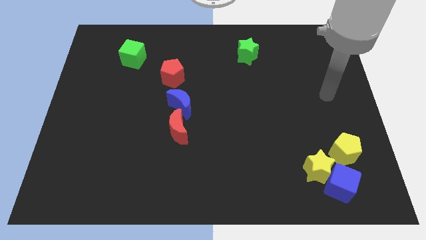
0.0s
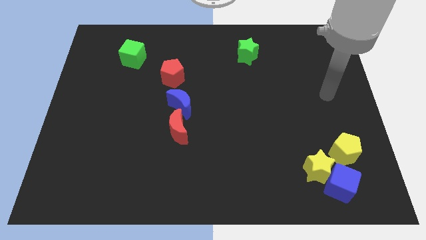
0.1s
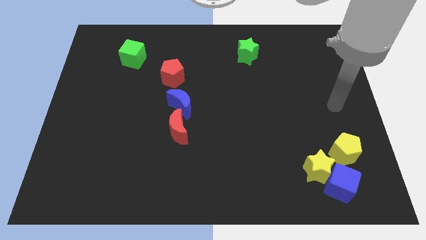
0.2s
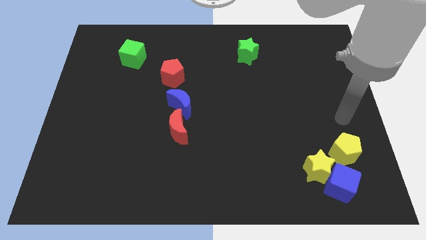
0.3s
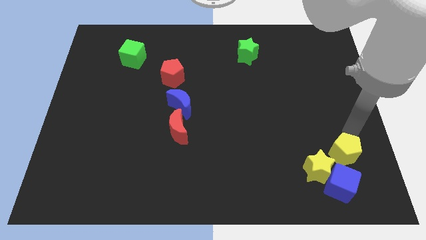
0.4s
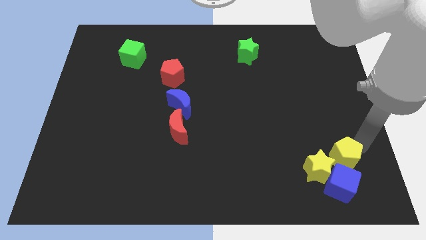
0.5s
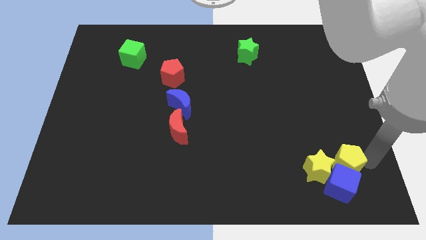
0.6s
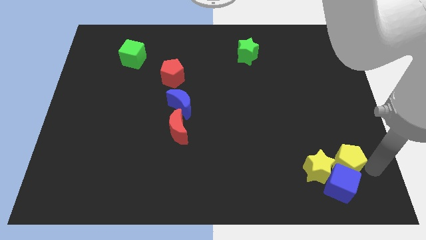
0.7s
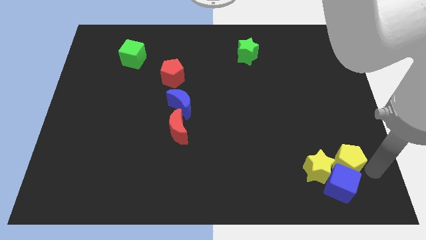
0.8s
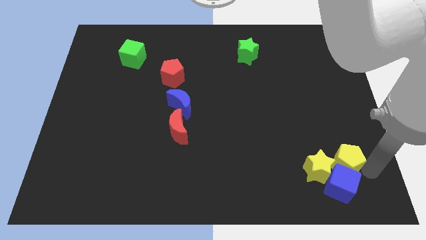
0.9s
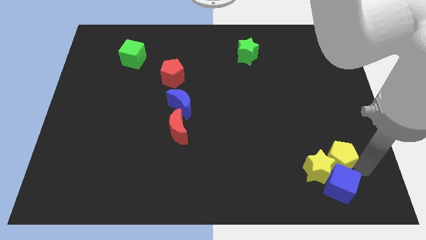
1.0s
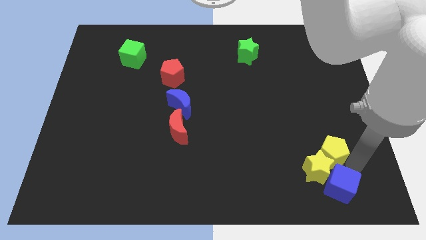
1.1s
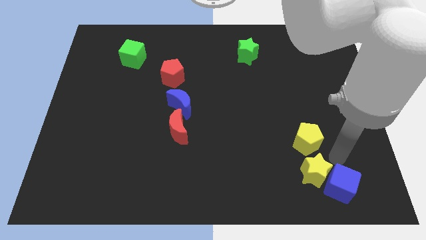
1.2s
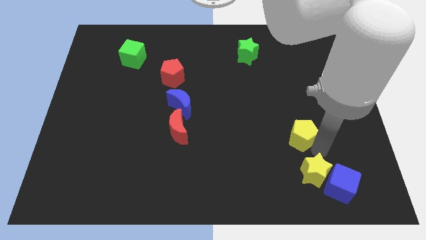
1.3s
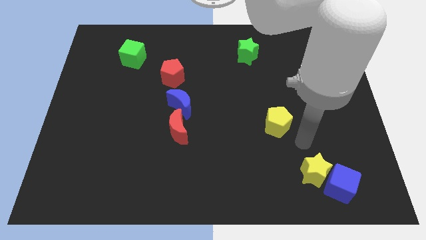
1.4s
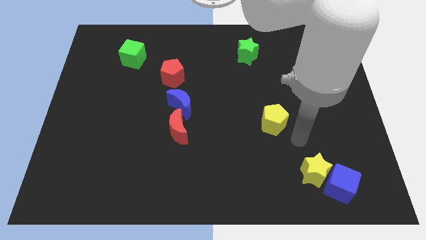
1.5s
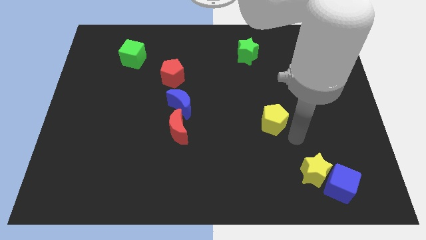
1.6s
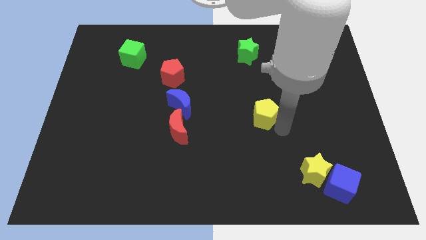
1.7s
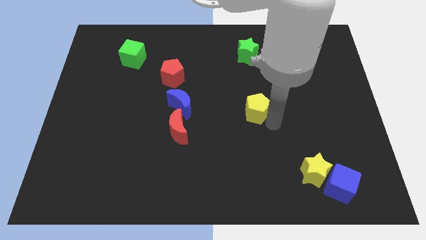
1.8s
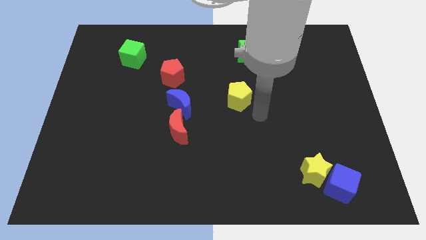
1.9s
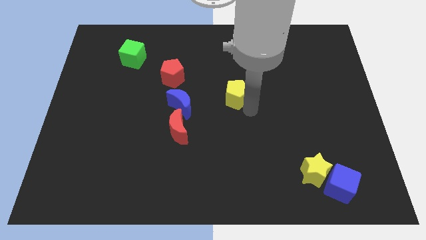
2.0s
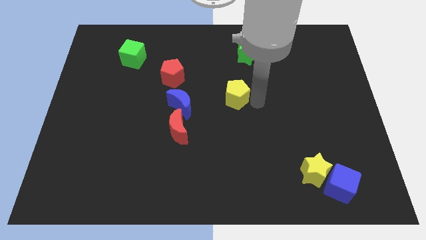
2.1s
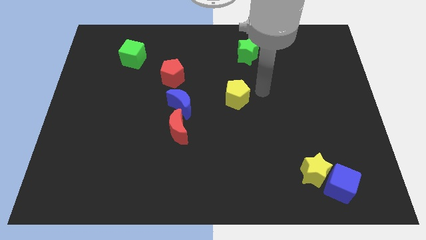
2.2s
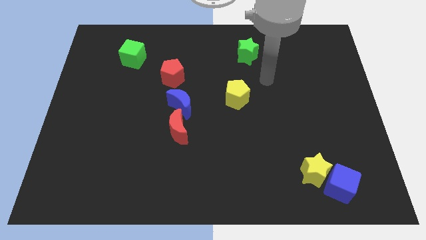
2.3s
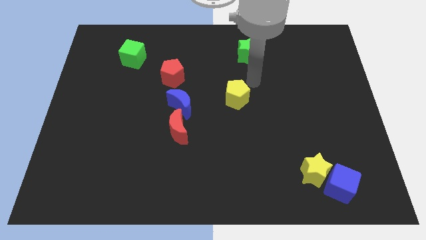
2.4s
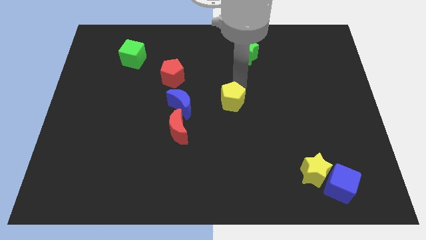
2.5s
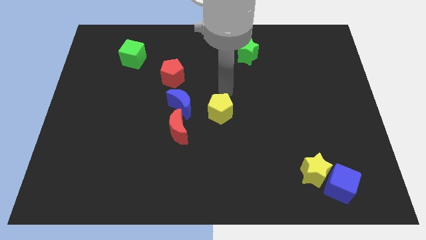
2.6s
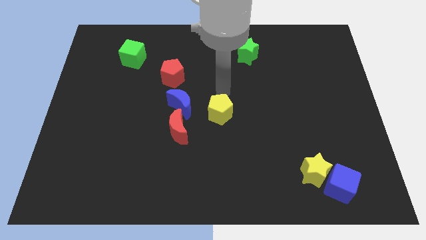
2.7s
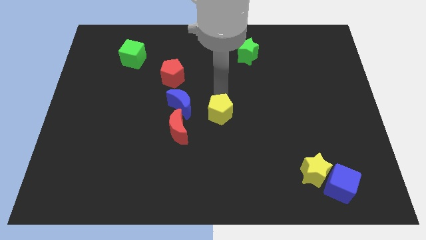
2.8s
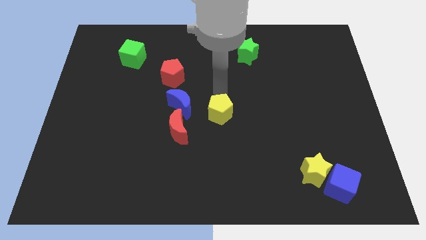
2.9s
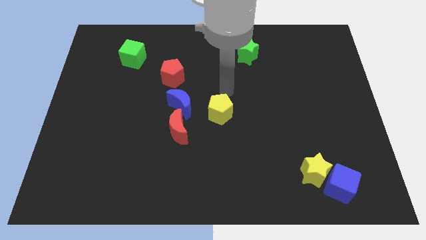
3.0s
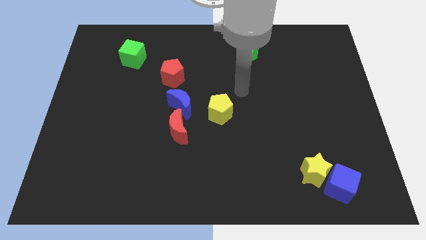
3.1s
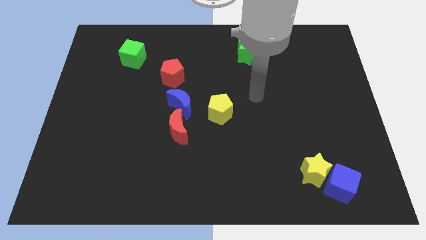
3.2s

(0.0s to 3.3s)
push the yellow pentagon to the center of the board

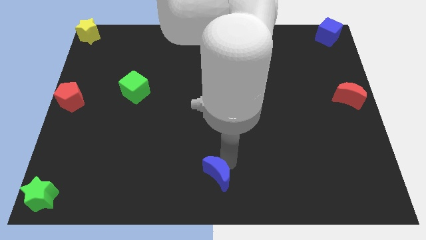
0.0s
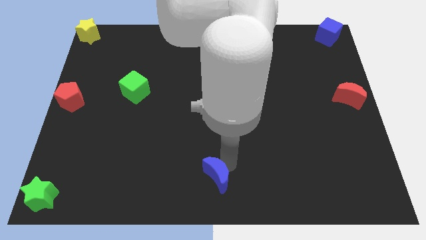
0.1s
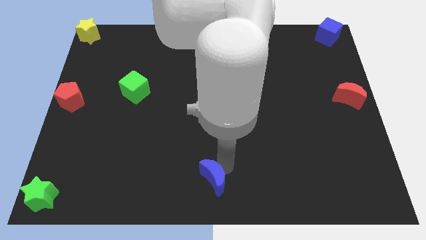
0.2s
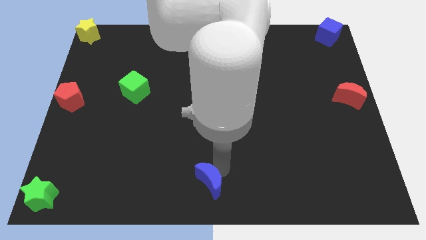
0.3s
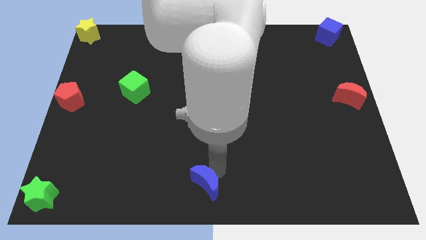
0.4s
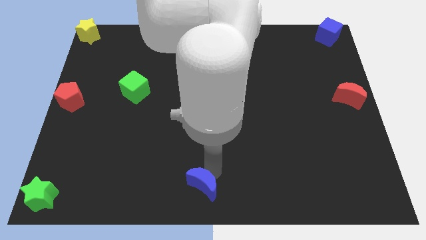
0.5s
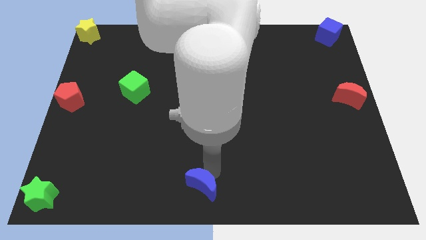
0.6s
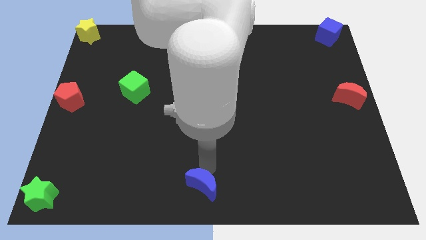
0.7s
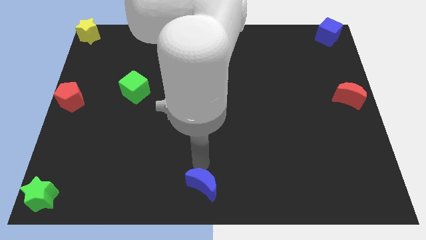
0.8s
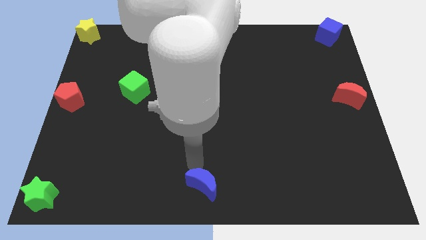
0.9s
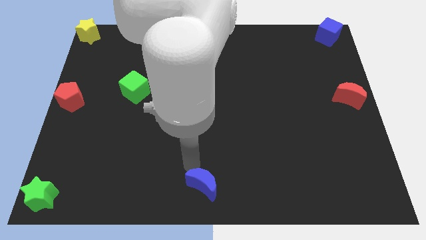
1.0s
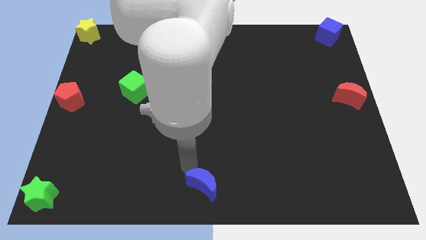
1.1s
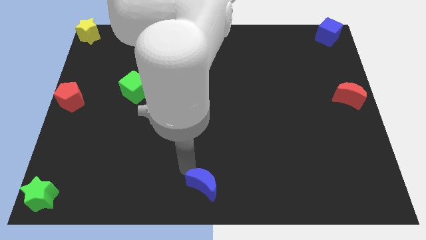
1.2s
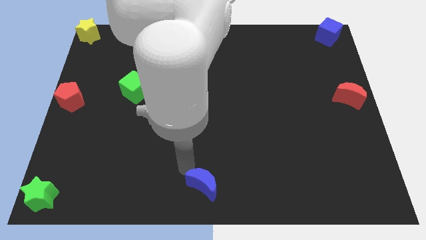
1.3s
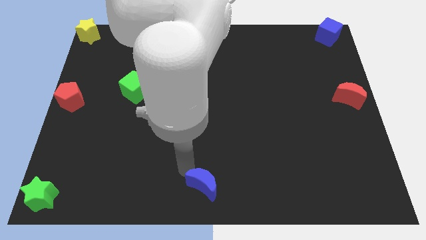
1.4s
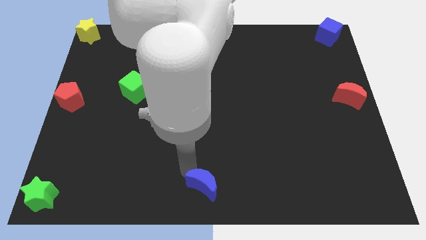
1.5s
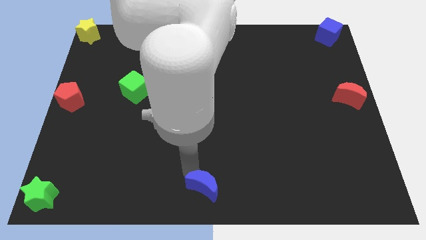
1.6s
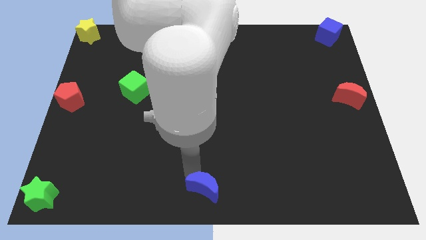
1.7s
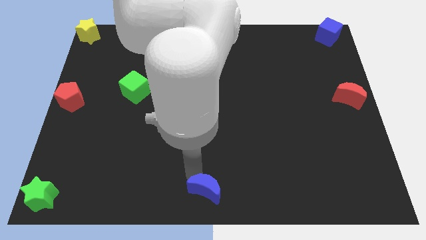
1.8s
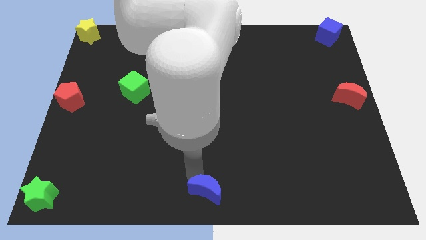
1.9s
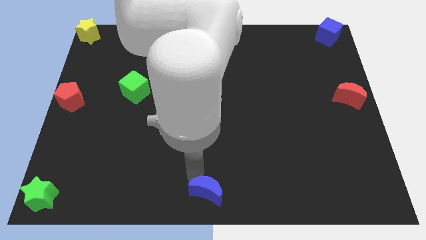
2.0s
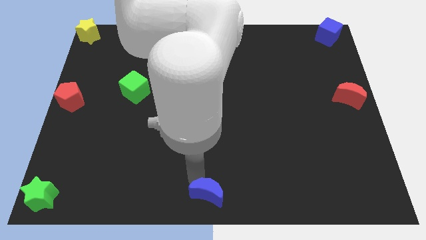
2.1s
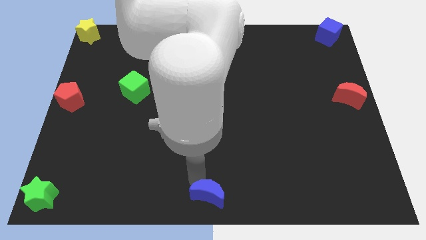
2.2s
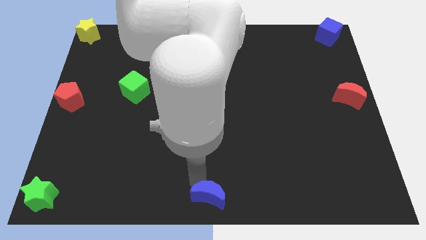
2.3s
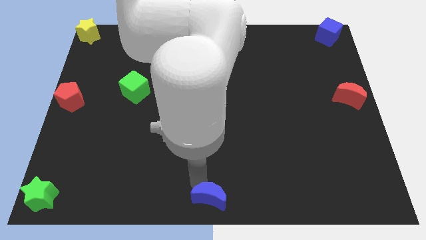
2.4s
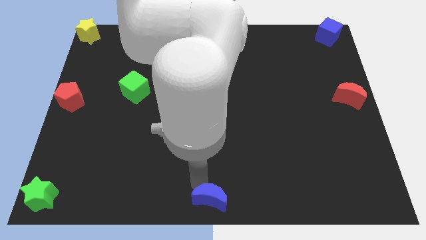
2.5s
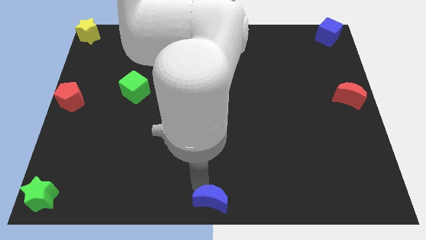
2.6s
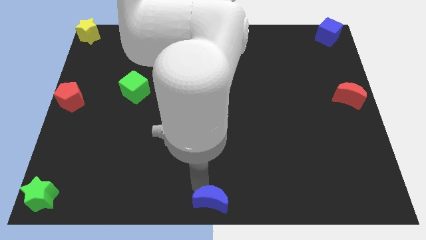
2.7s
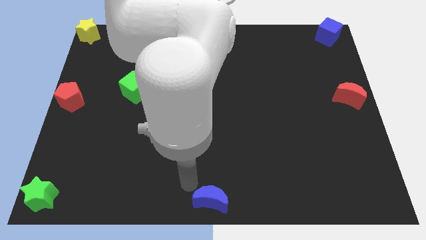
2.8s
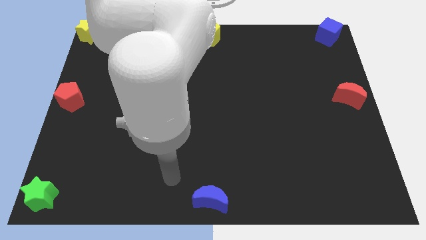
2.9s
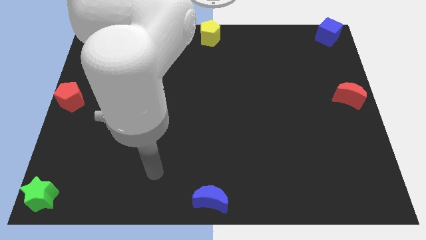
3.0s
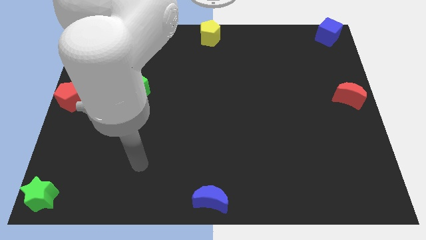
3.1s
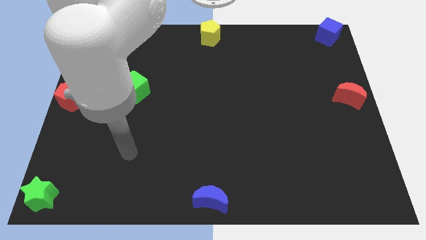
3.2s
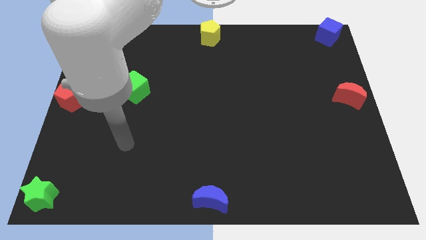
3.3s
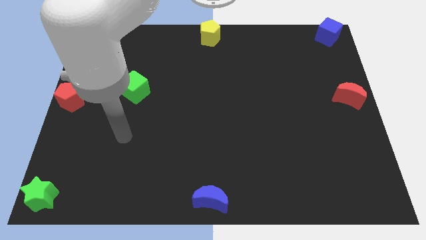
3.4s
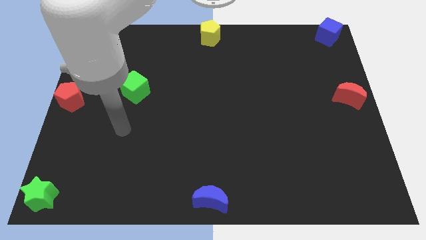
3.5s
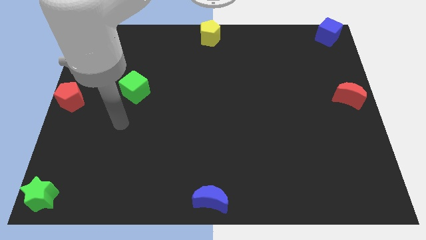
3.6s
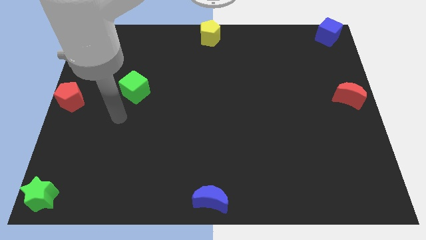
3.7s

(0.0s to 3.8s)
move the blue crescent to the bottom center of the board

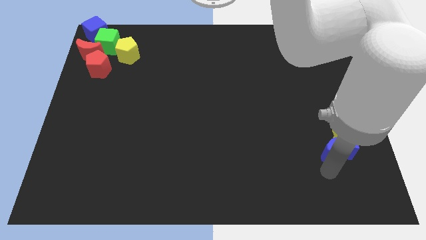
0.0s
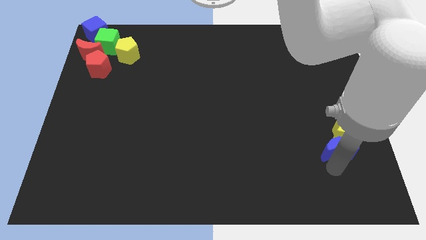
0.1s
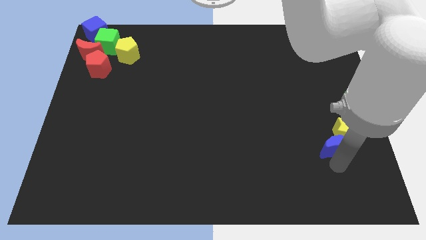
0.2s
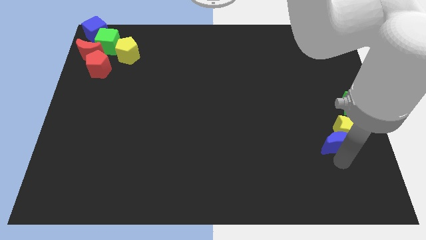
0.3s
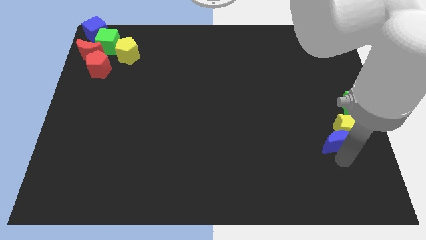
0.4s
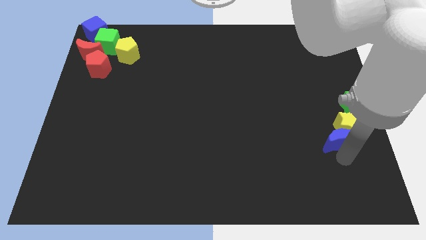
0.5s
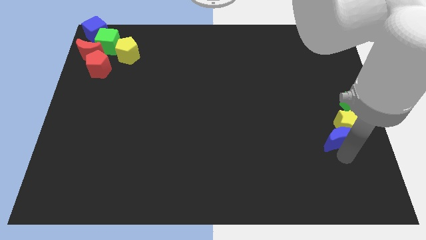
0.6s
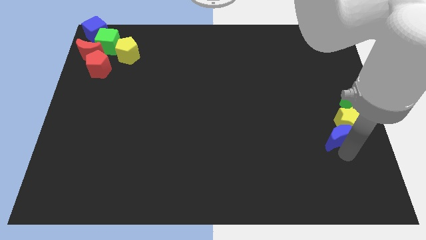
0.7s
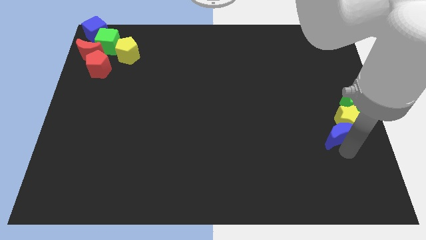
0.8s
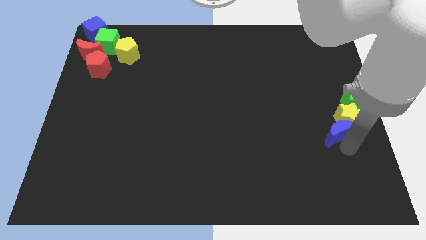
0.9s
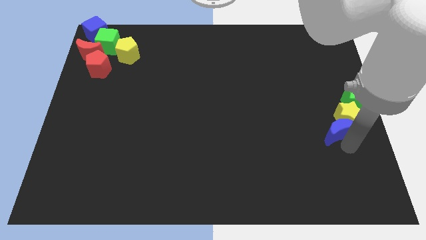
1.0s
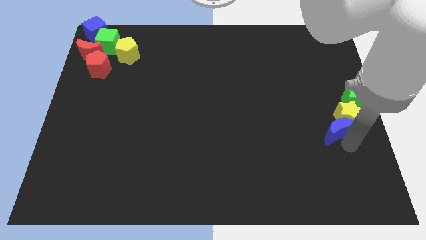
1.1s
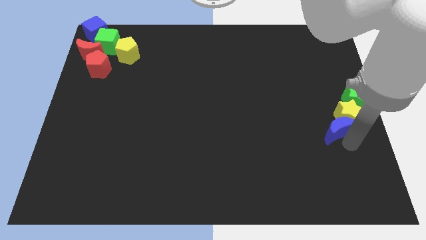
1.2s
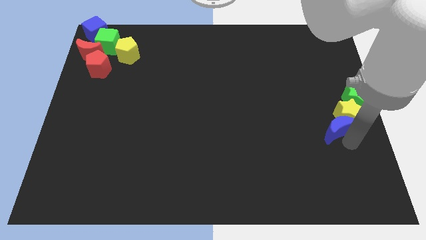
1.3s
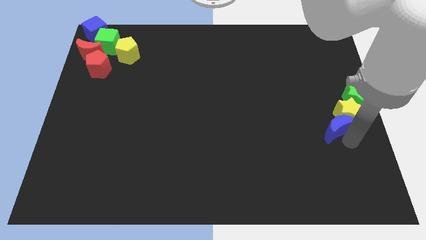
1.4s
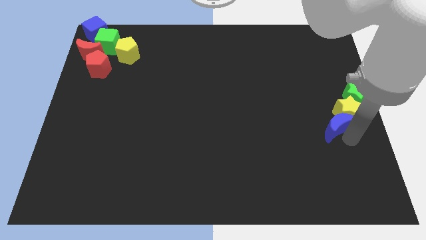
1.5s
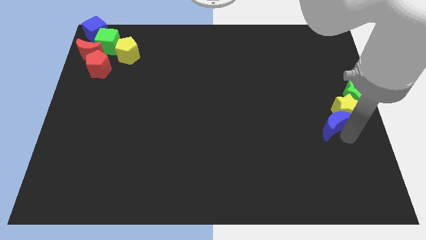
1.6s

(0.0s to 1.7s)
move yellow star into green star

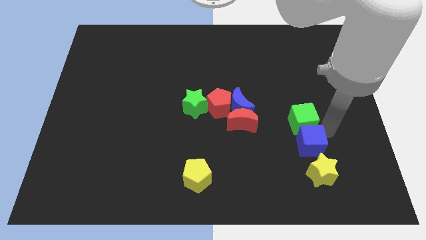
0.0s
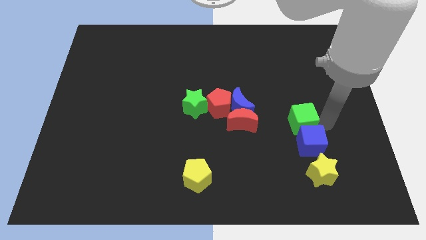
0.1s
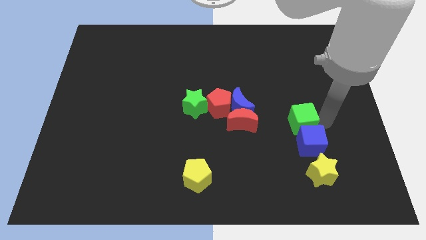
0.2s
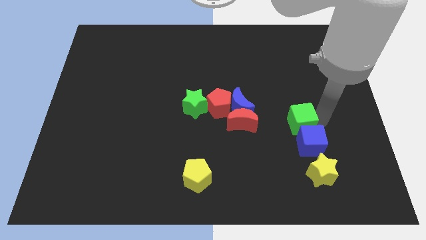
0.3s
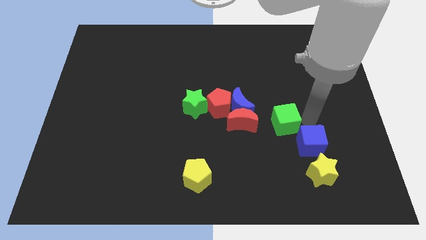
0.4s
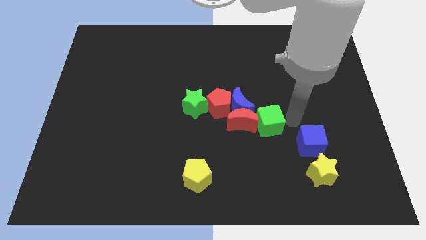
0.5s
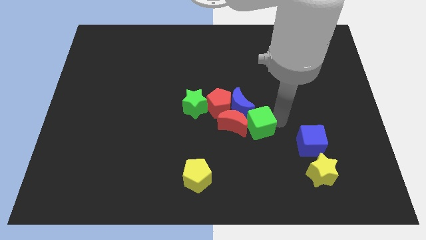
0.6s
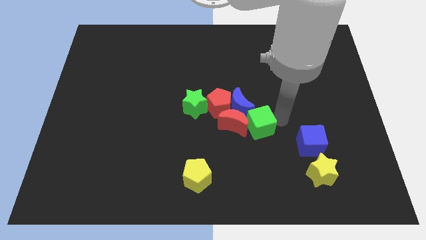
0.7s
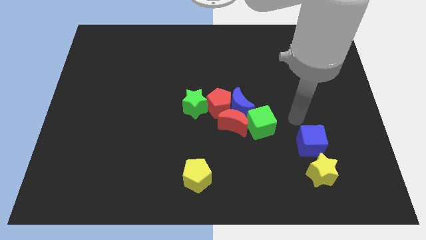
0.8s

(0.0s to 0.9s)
push the green cube into the red crescent
